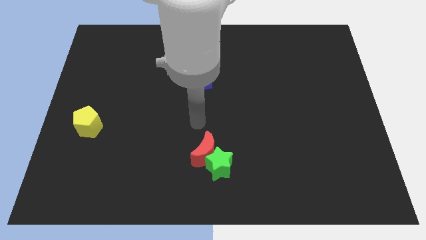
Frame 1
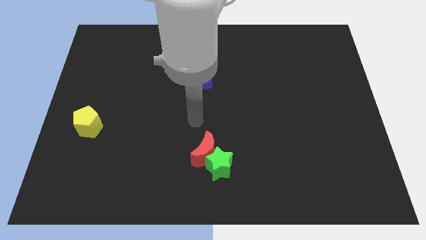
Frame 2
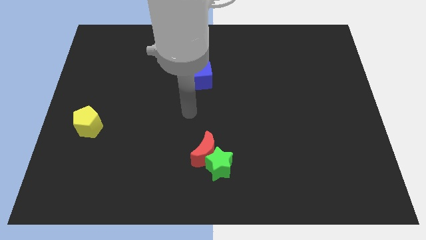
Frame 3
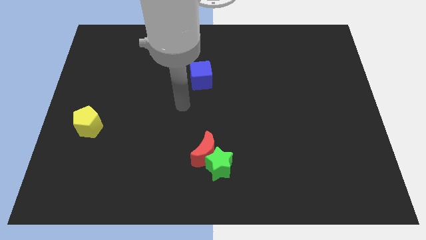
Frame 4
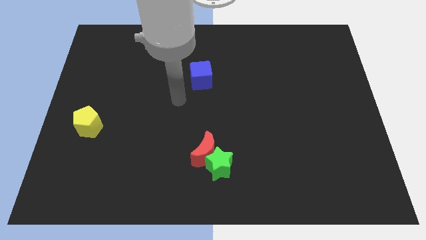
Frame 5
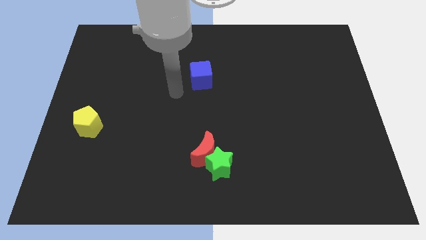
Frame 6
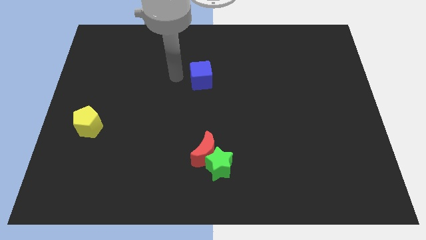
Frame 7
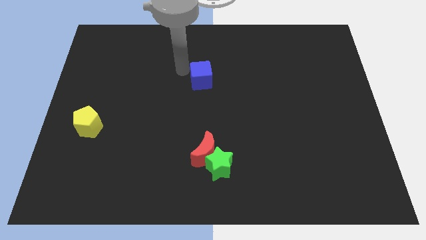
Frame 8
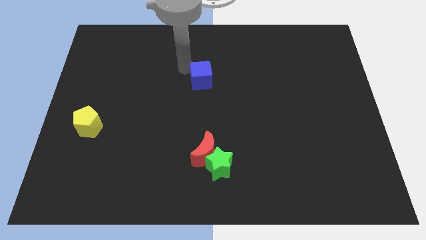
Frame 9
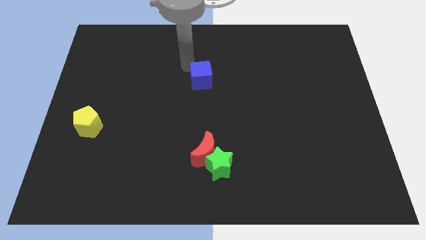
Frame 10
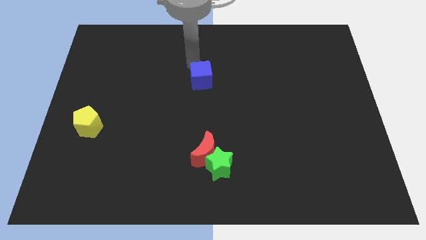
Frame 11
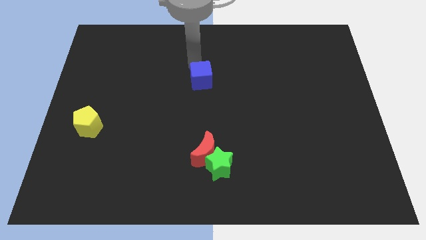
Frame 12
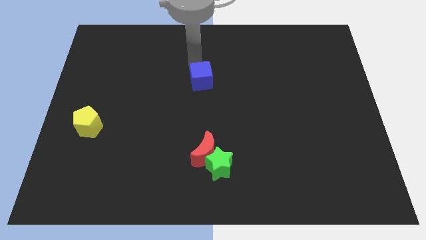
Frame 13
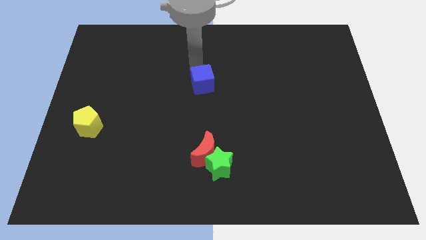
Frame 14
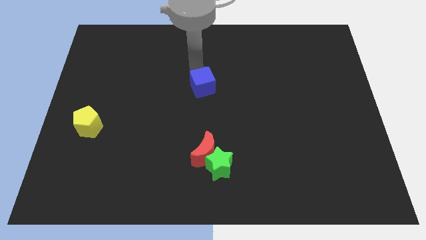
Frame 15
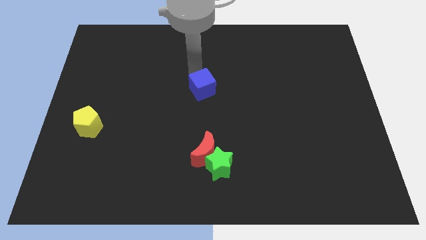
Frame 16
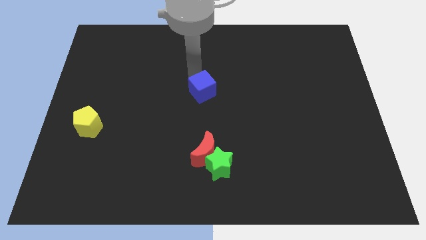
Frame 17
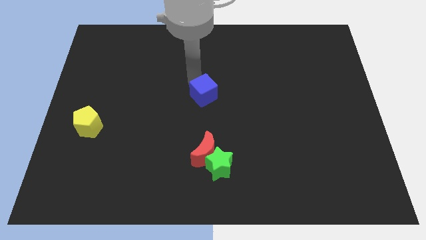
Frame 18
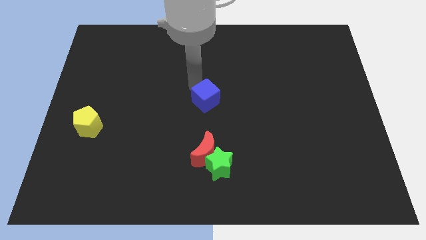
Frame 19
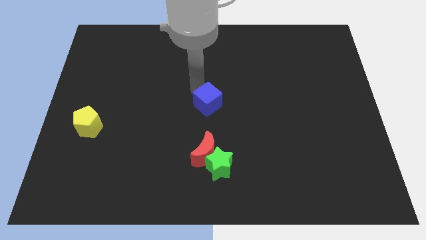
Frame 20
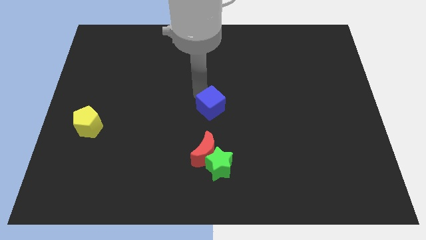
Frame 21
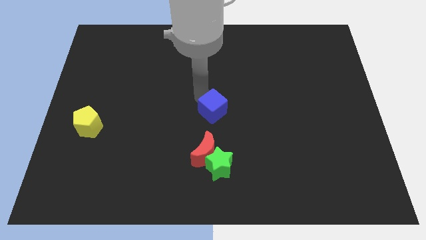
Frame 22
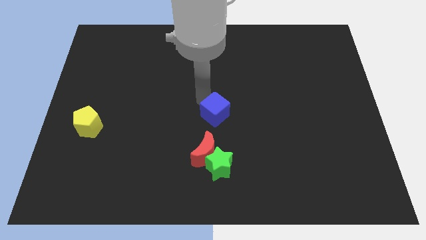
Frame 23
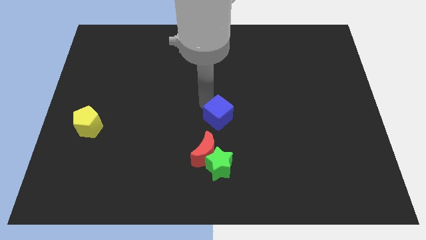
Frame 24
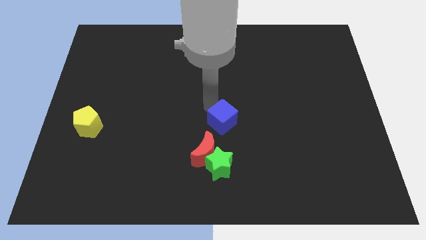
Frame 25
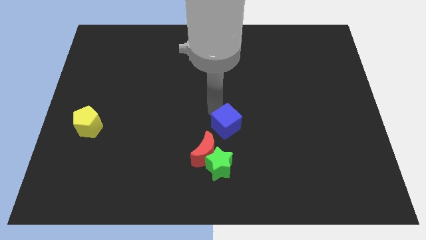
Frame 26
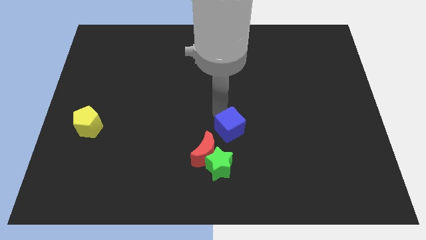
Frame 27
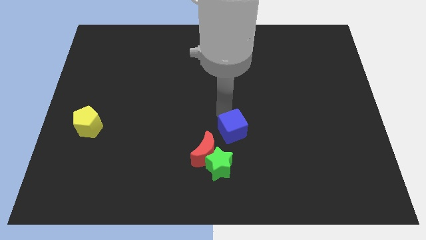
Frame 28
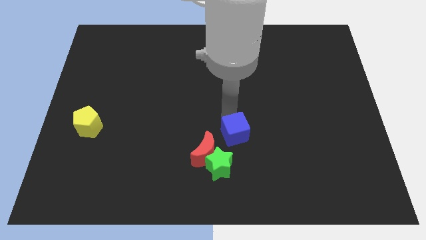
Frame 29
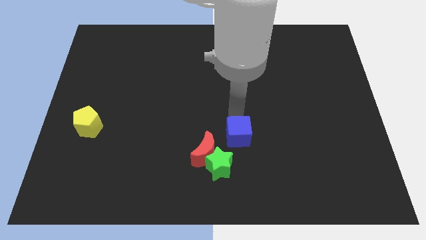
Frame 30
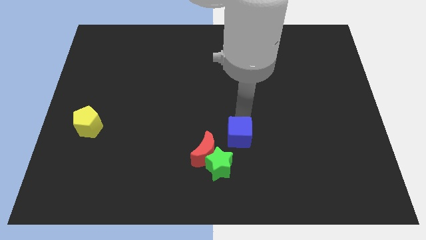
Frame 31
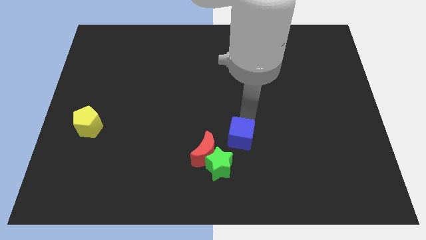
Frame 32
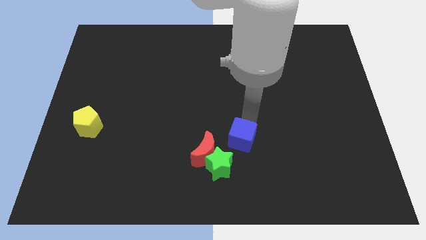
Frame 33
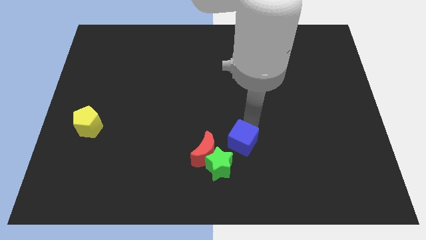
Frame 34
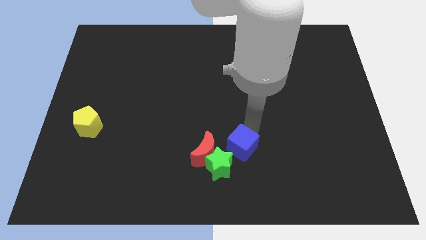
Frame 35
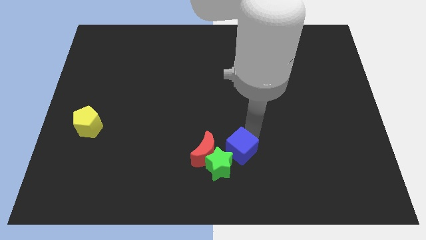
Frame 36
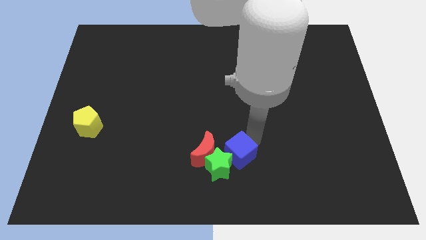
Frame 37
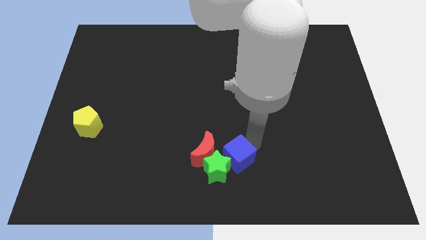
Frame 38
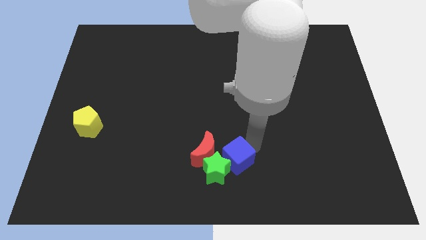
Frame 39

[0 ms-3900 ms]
put the blue cube towards the green star

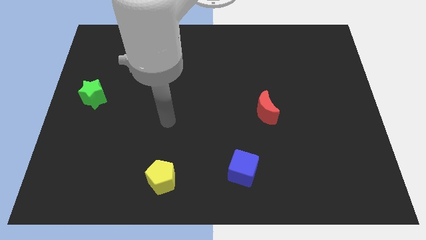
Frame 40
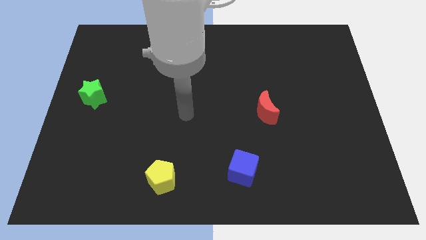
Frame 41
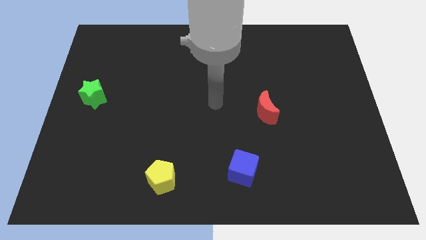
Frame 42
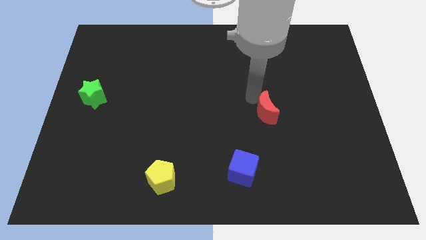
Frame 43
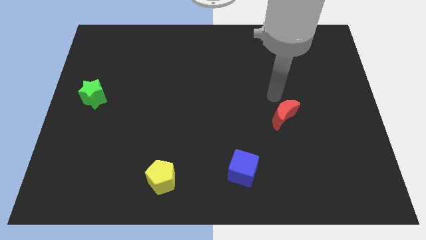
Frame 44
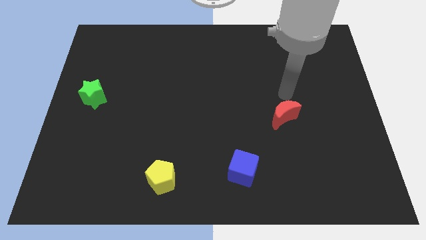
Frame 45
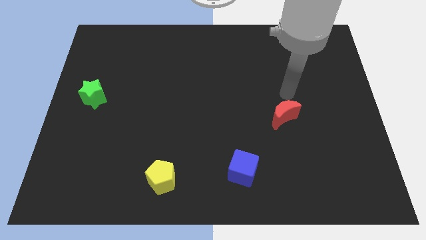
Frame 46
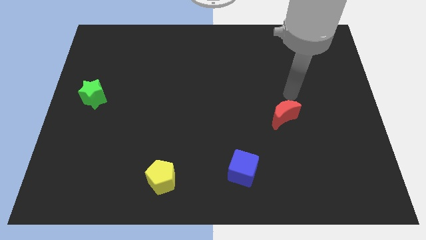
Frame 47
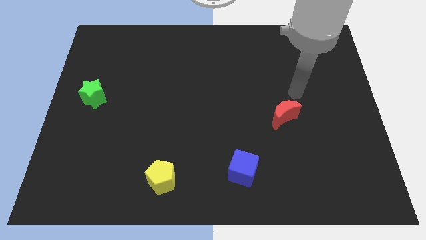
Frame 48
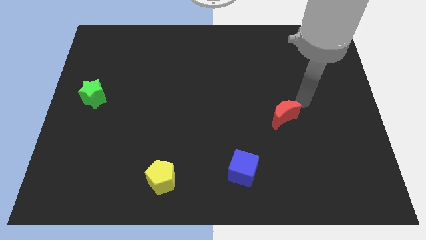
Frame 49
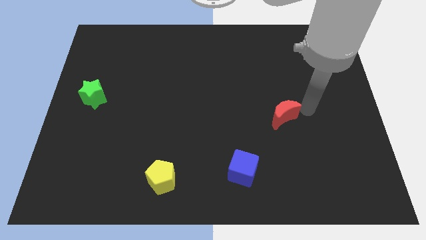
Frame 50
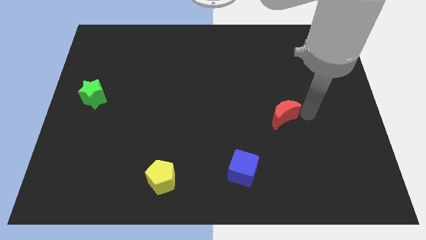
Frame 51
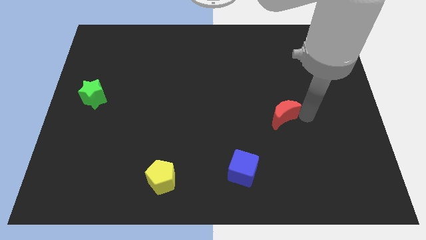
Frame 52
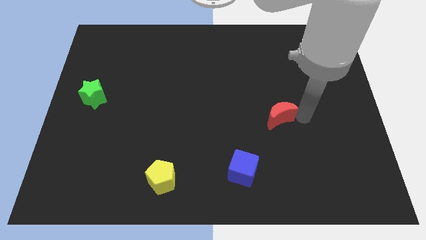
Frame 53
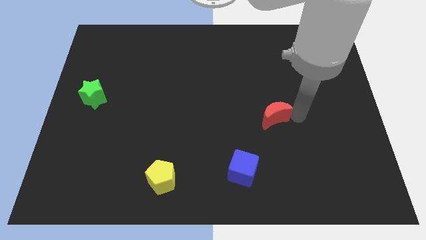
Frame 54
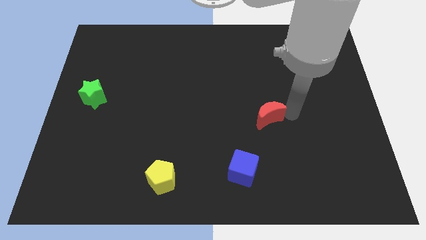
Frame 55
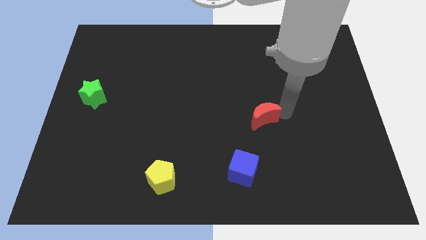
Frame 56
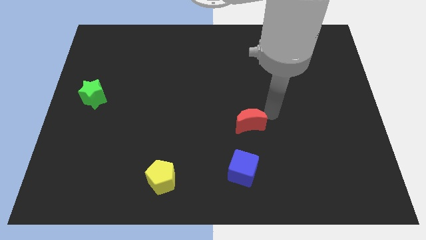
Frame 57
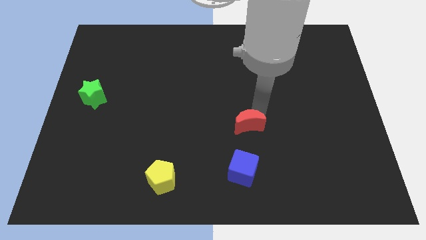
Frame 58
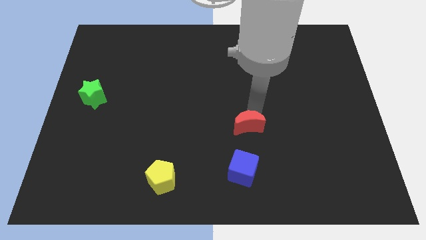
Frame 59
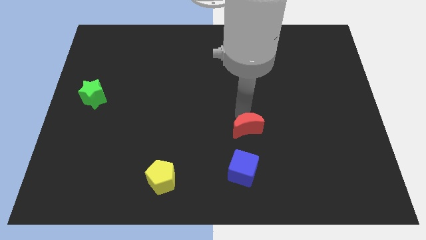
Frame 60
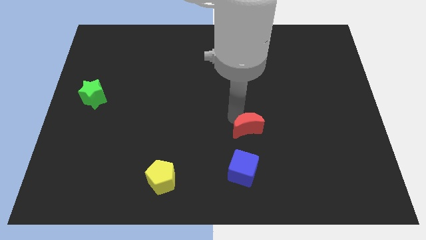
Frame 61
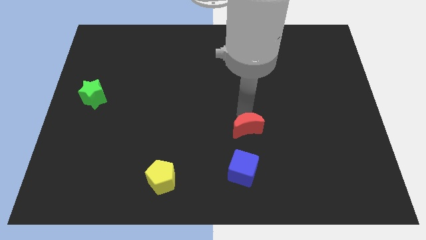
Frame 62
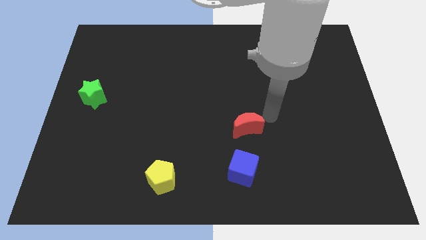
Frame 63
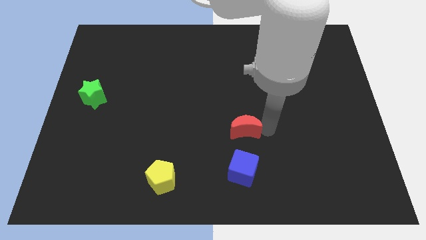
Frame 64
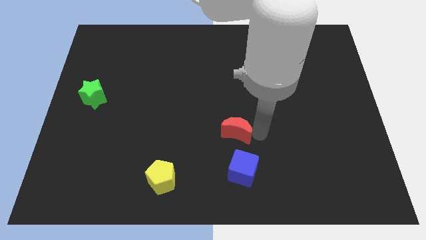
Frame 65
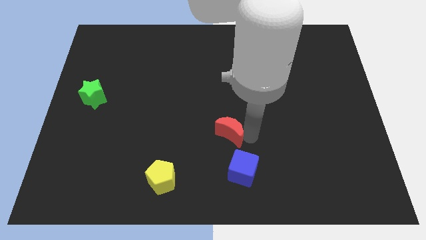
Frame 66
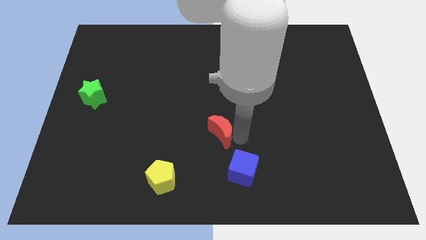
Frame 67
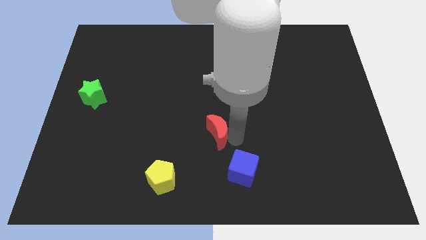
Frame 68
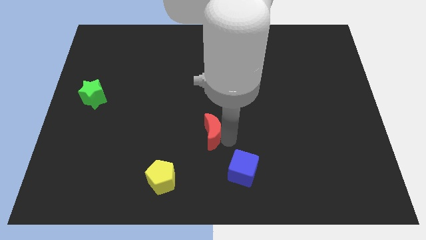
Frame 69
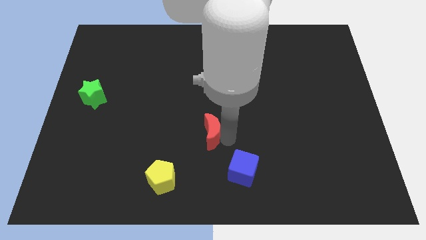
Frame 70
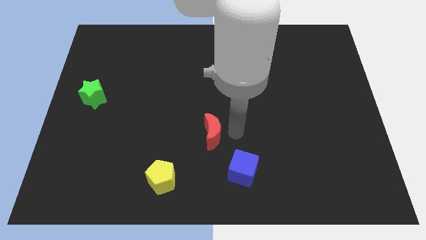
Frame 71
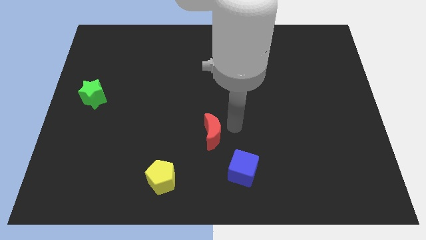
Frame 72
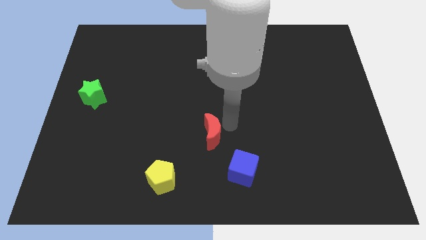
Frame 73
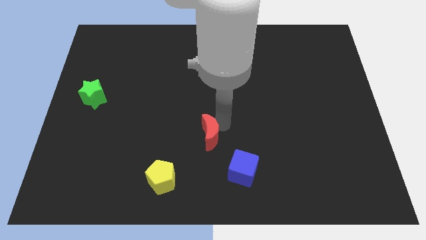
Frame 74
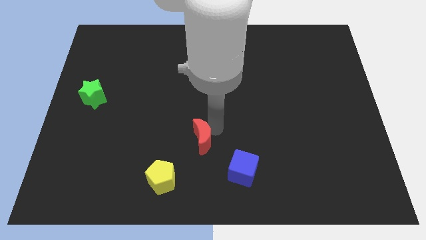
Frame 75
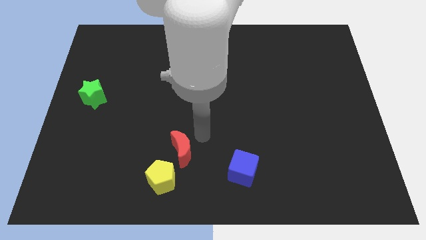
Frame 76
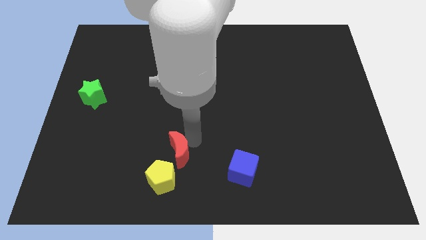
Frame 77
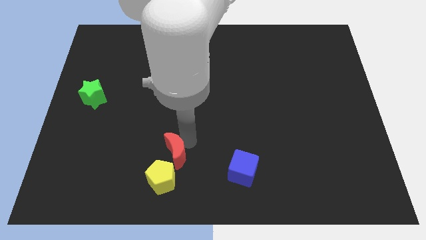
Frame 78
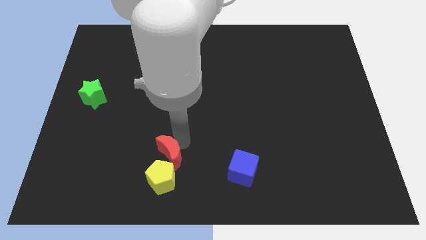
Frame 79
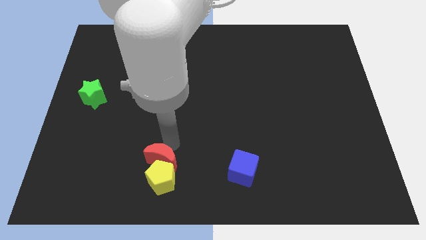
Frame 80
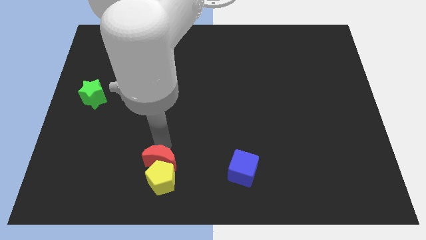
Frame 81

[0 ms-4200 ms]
slide the moon to the pentagon

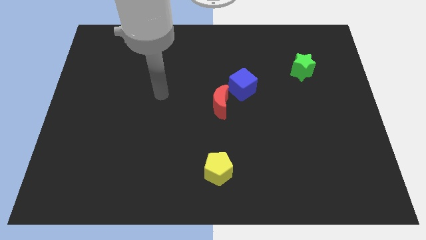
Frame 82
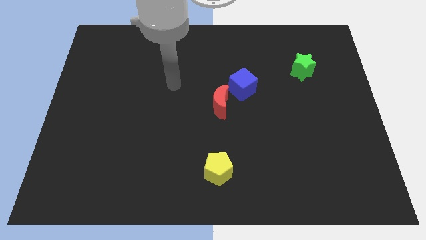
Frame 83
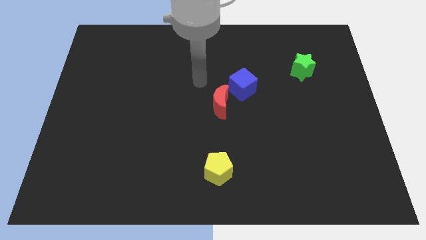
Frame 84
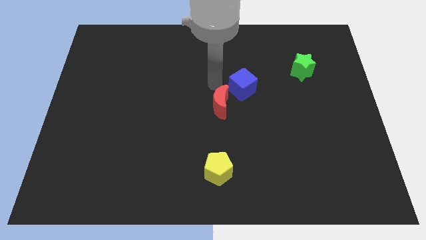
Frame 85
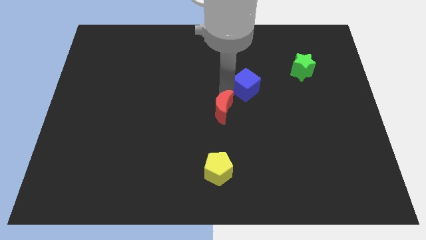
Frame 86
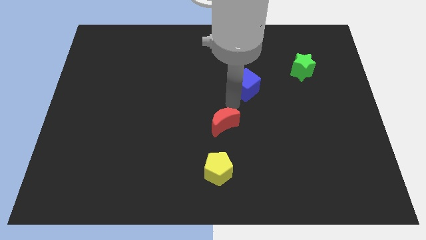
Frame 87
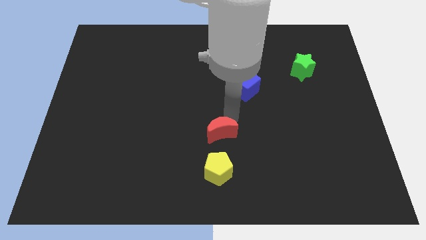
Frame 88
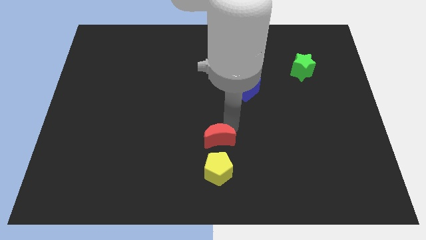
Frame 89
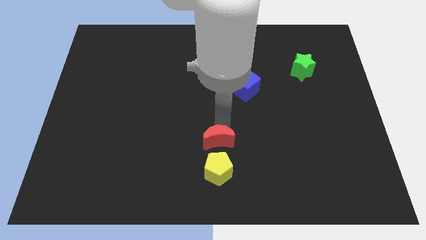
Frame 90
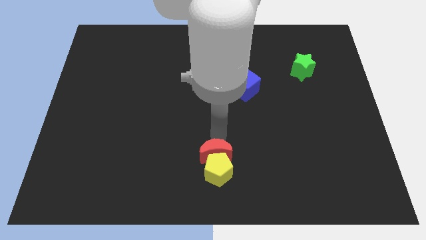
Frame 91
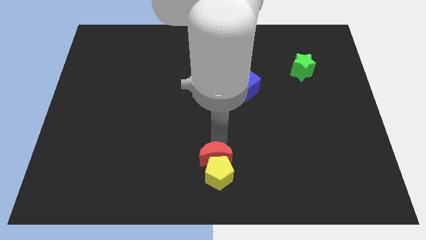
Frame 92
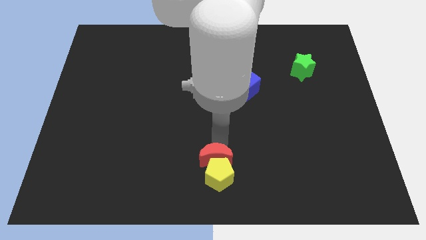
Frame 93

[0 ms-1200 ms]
put the moon to the pentagon
